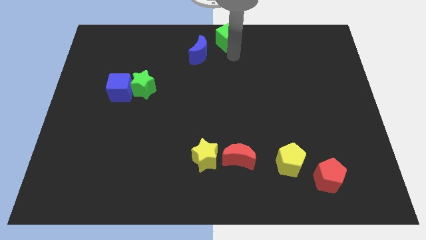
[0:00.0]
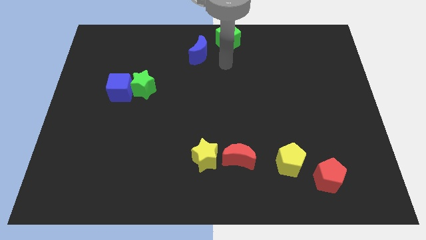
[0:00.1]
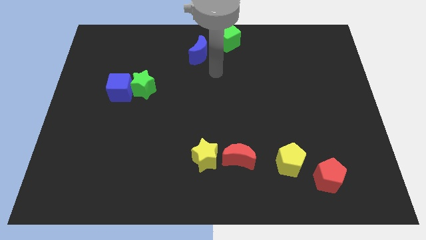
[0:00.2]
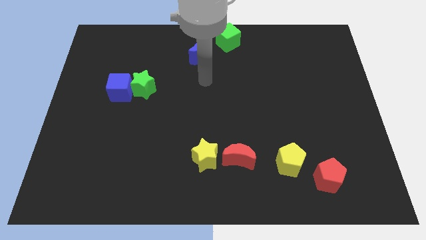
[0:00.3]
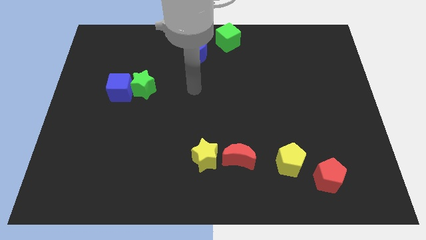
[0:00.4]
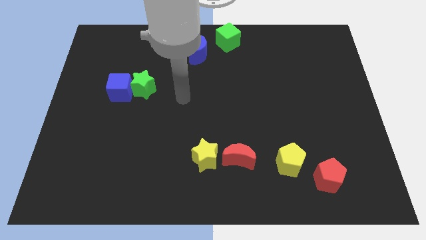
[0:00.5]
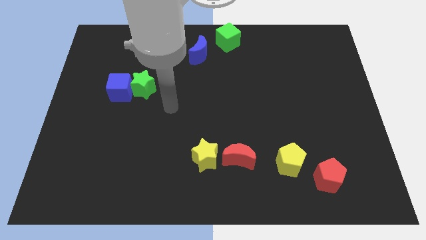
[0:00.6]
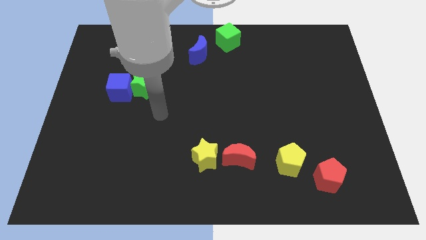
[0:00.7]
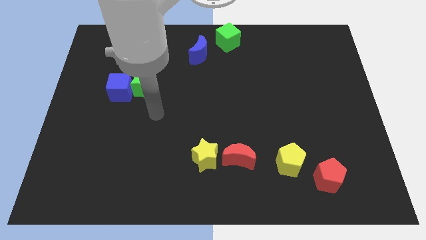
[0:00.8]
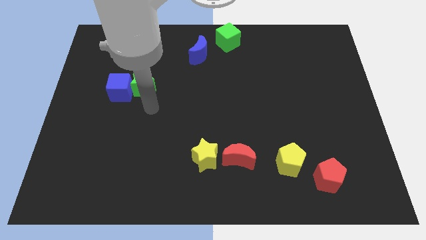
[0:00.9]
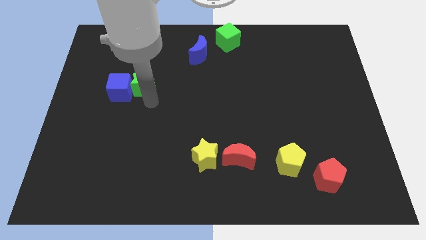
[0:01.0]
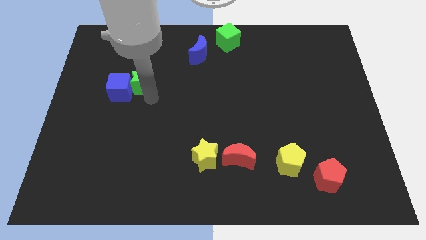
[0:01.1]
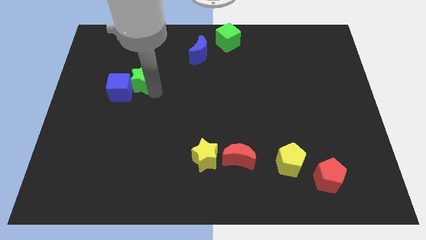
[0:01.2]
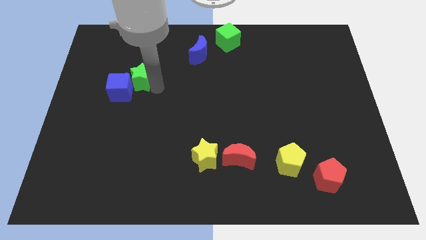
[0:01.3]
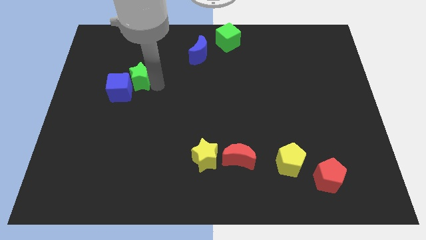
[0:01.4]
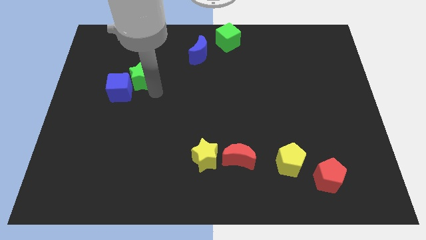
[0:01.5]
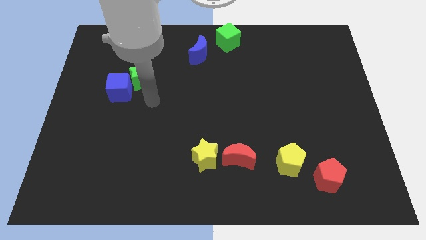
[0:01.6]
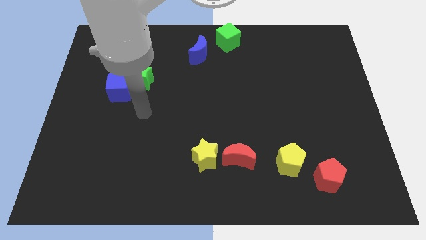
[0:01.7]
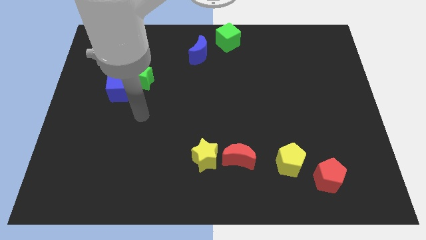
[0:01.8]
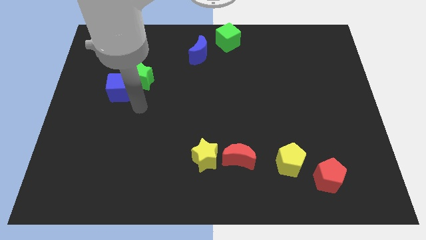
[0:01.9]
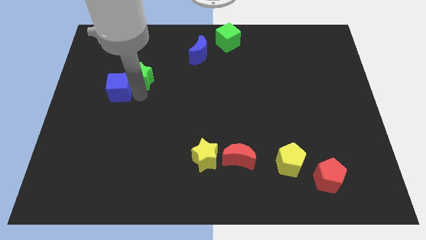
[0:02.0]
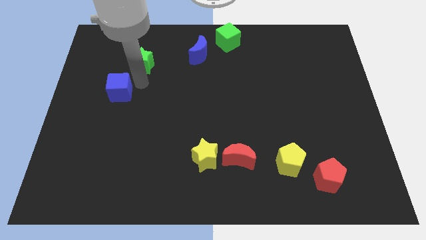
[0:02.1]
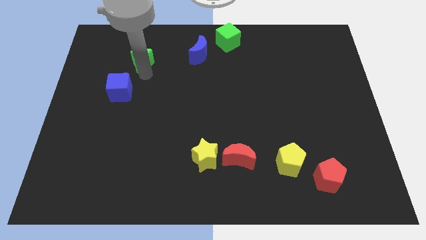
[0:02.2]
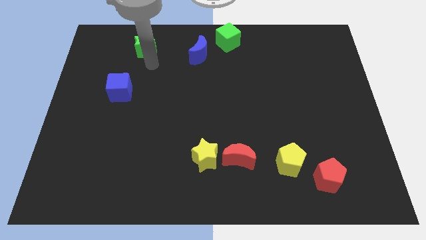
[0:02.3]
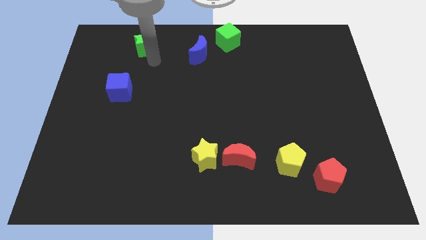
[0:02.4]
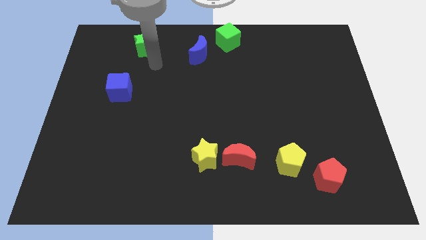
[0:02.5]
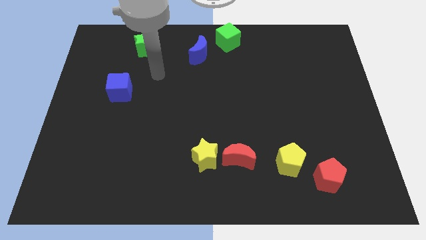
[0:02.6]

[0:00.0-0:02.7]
slightly push the green star towards the top of the board

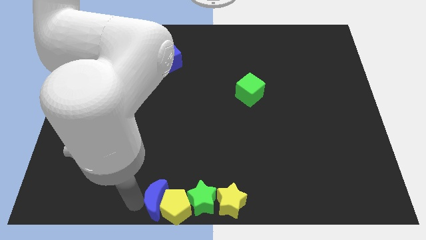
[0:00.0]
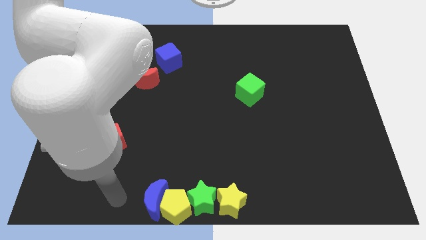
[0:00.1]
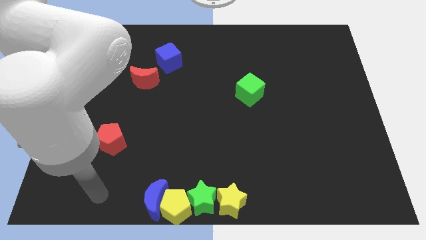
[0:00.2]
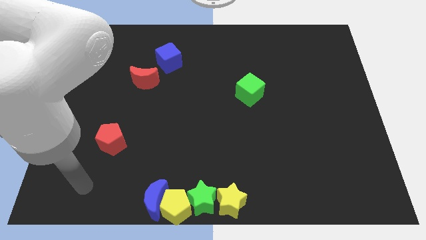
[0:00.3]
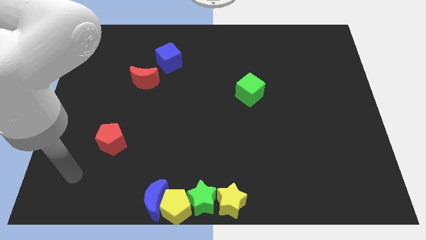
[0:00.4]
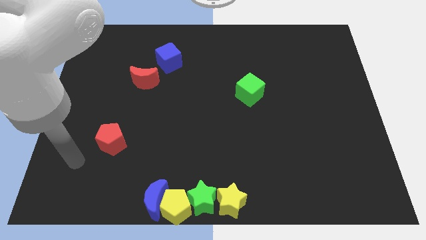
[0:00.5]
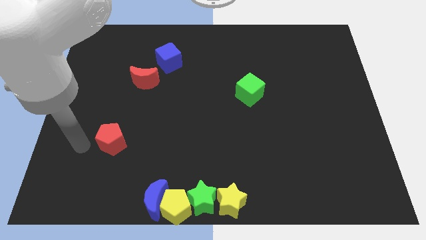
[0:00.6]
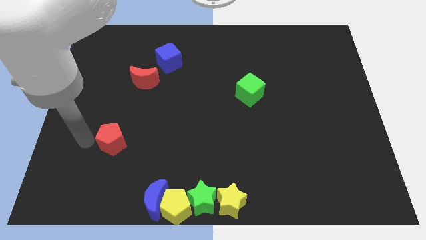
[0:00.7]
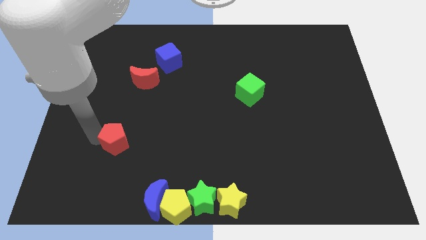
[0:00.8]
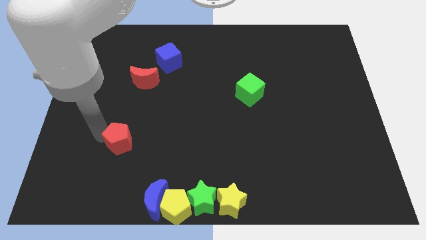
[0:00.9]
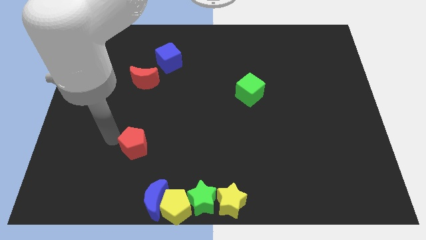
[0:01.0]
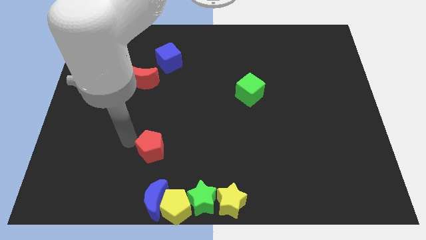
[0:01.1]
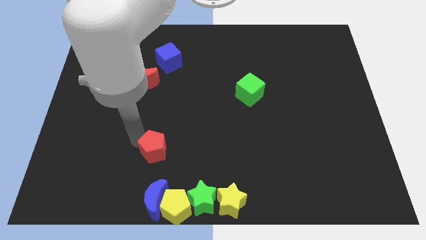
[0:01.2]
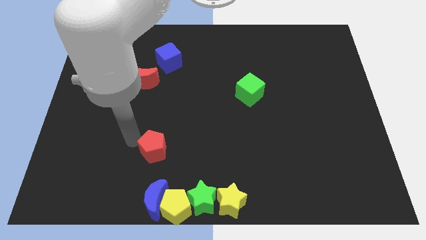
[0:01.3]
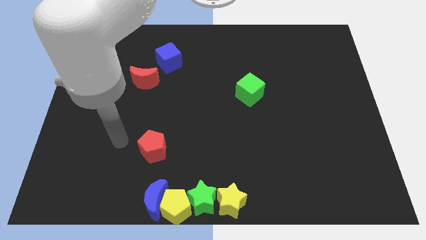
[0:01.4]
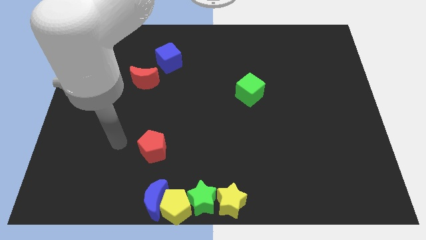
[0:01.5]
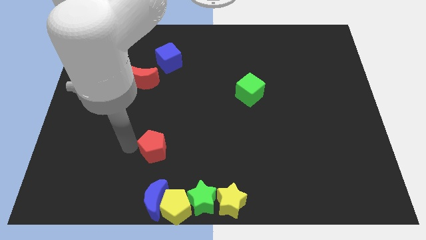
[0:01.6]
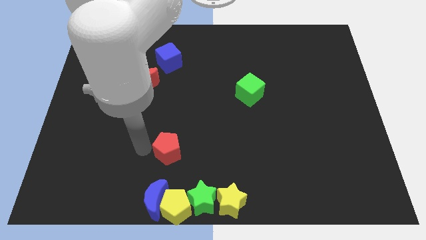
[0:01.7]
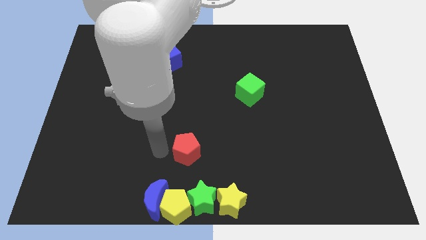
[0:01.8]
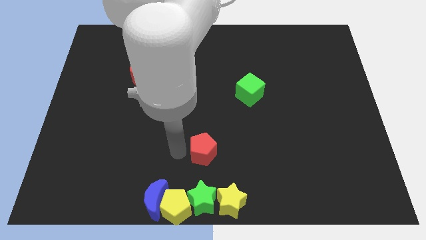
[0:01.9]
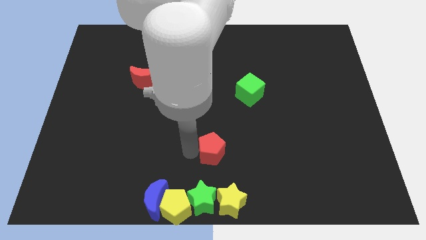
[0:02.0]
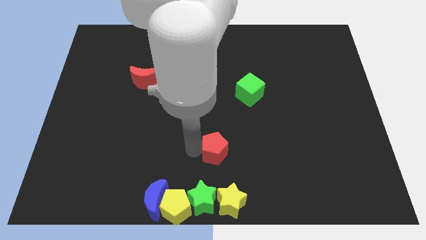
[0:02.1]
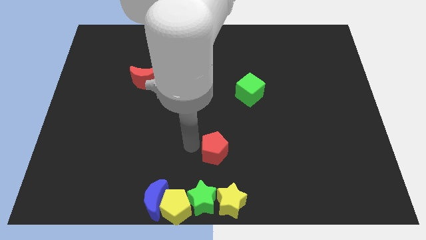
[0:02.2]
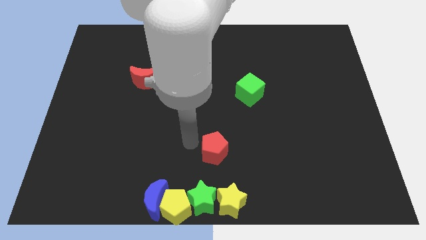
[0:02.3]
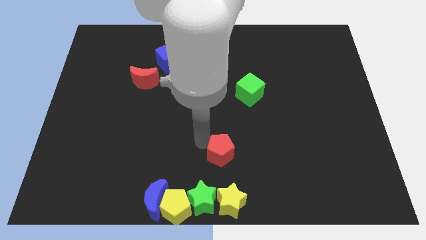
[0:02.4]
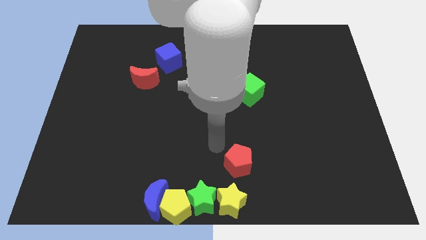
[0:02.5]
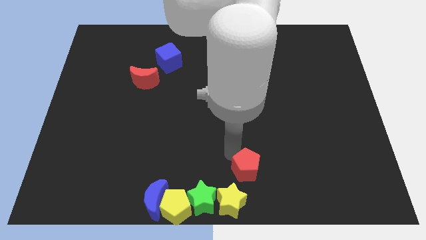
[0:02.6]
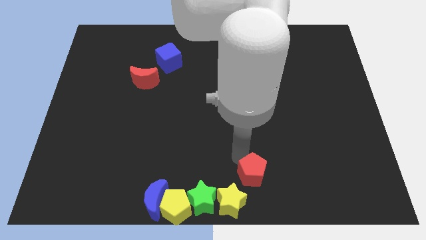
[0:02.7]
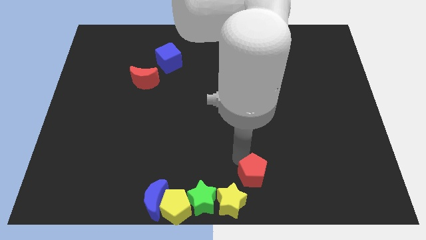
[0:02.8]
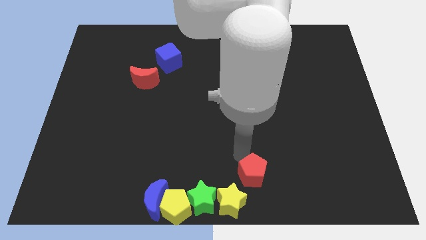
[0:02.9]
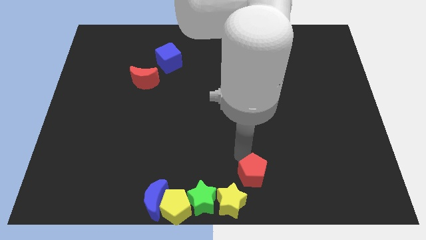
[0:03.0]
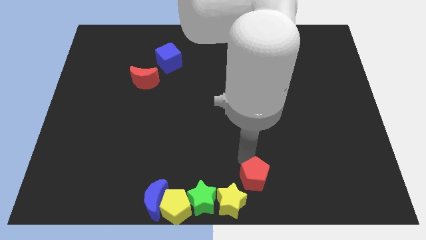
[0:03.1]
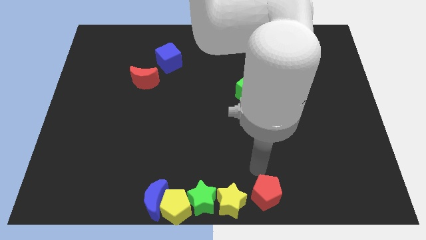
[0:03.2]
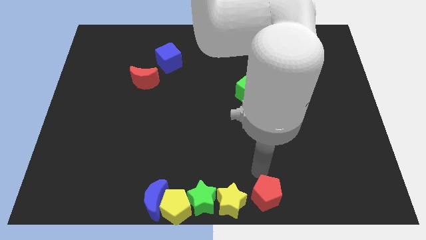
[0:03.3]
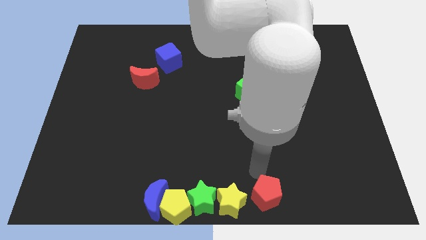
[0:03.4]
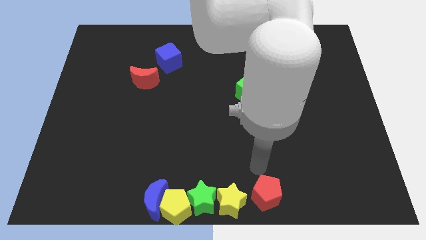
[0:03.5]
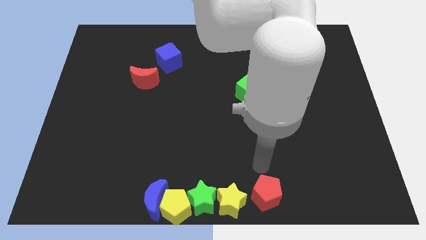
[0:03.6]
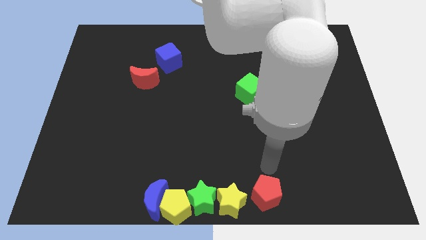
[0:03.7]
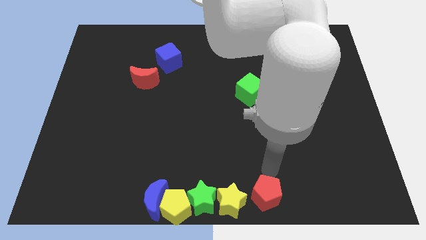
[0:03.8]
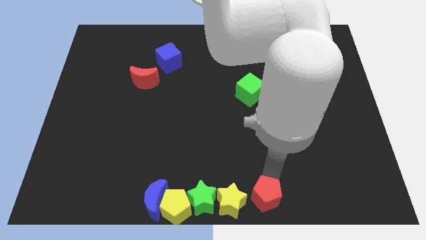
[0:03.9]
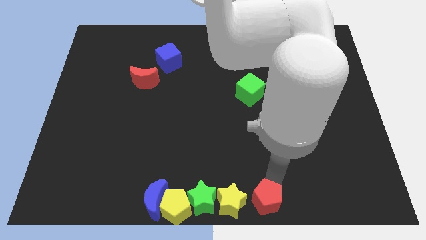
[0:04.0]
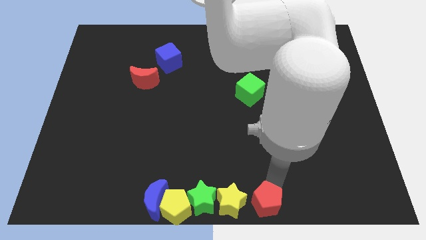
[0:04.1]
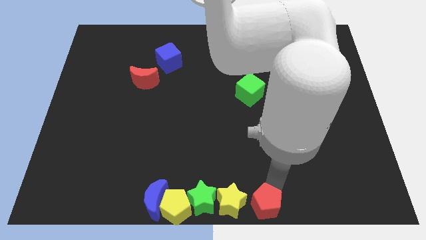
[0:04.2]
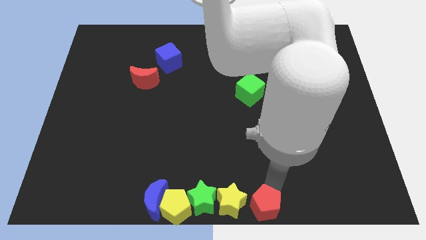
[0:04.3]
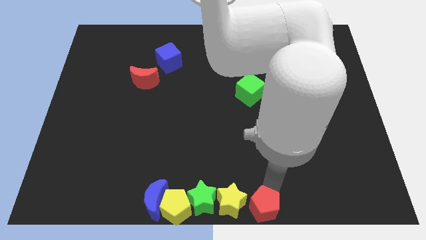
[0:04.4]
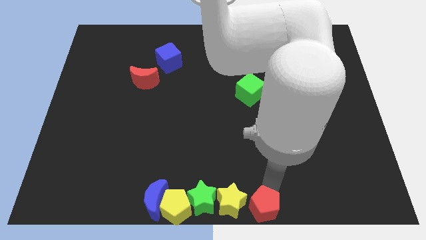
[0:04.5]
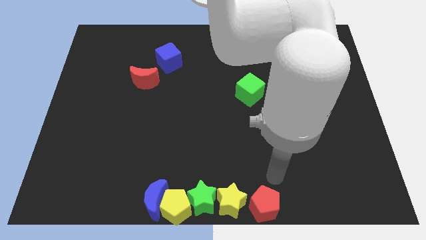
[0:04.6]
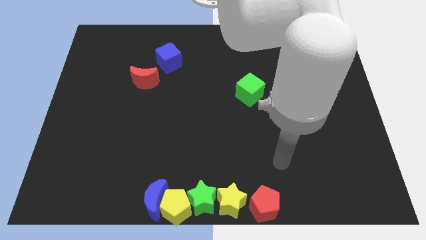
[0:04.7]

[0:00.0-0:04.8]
move the red pentagon near the yellow star

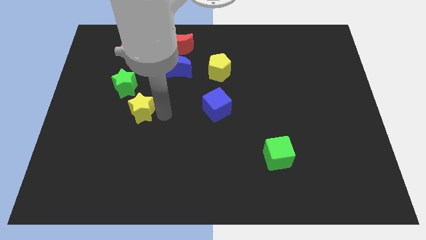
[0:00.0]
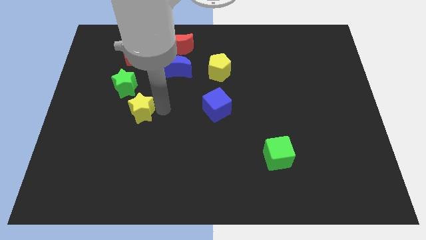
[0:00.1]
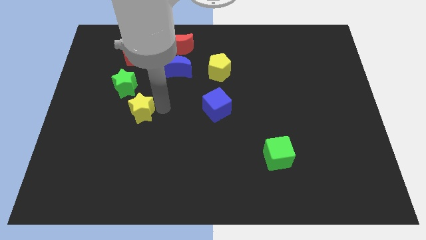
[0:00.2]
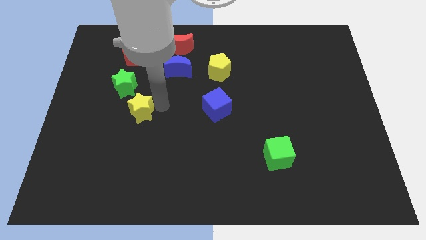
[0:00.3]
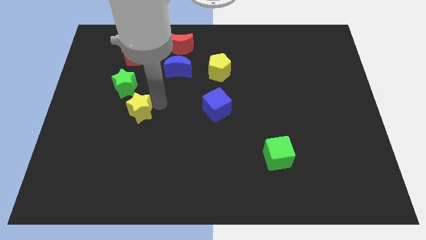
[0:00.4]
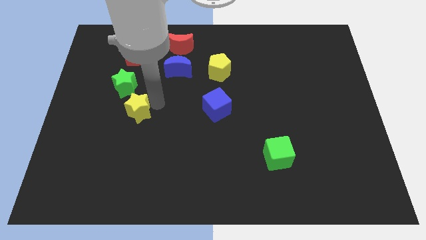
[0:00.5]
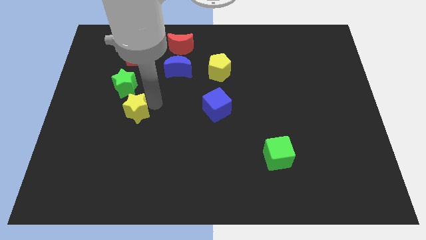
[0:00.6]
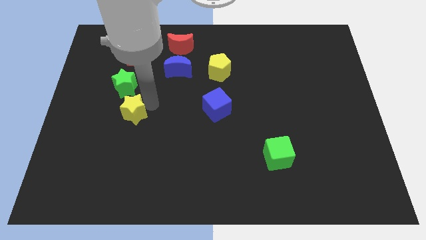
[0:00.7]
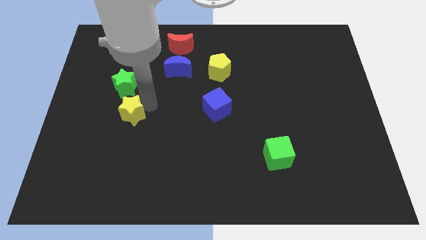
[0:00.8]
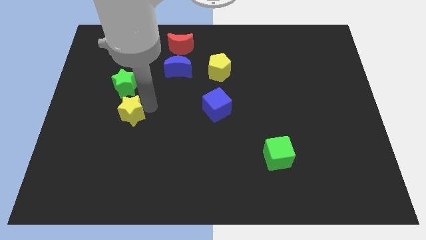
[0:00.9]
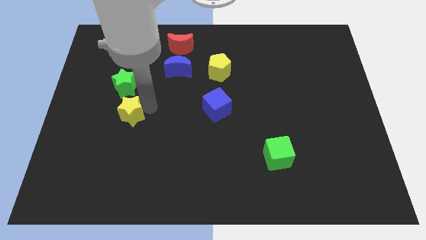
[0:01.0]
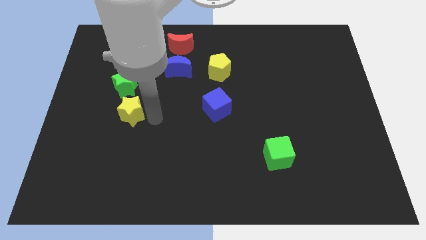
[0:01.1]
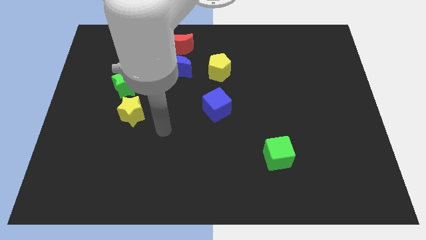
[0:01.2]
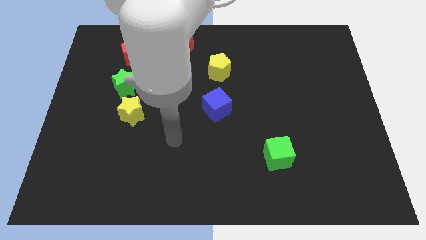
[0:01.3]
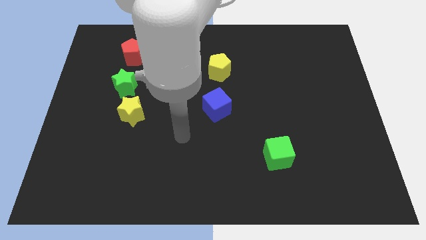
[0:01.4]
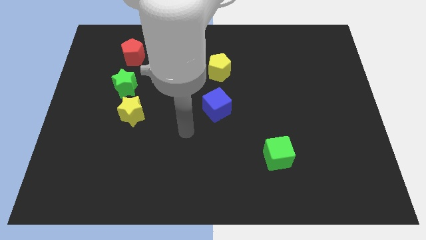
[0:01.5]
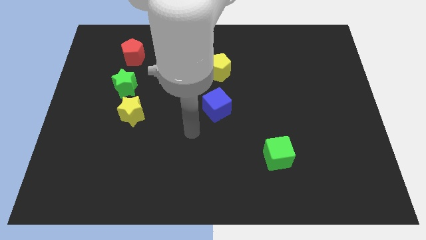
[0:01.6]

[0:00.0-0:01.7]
move the yellow star below the green star
